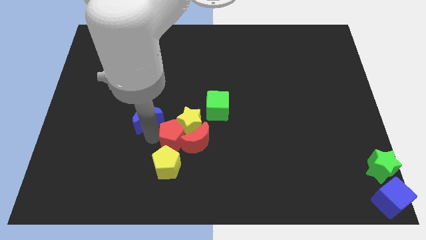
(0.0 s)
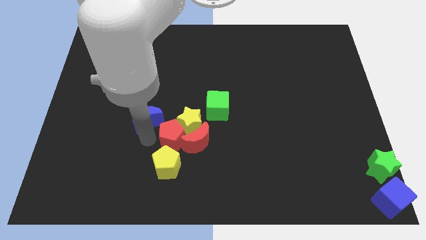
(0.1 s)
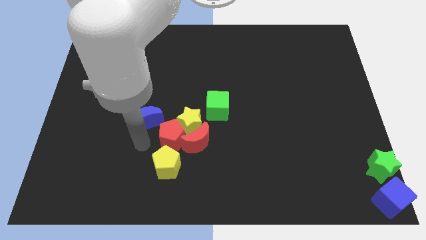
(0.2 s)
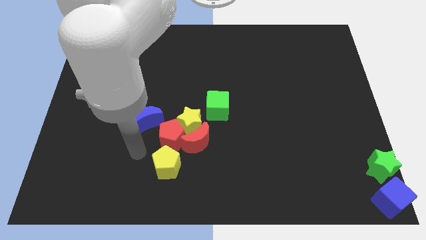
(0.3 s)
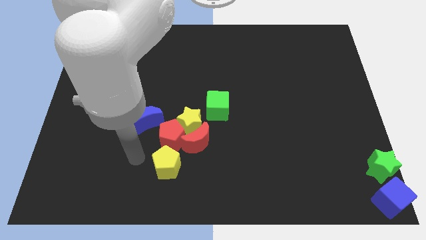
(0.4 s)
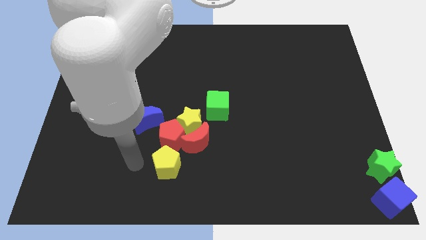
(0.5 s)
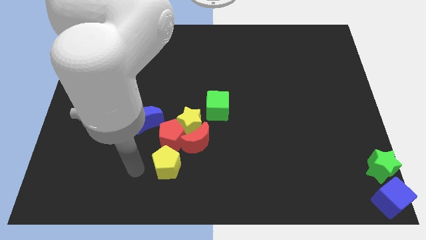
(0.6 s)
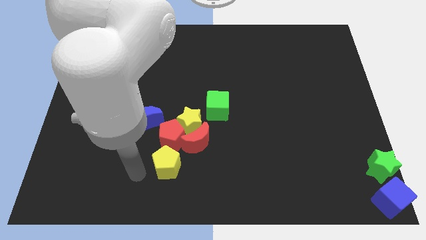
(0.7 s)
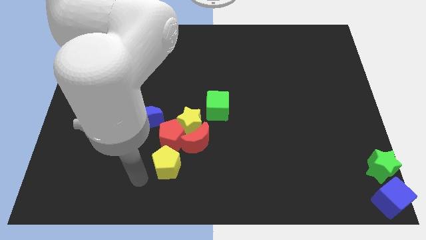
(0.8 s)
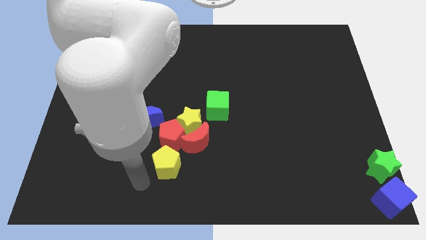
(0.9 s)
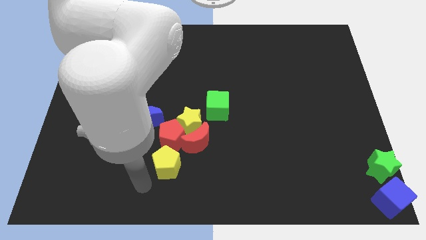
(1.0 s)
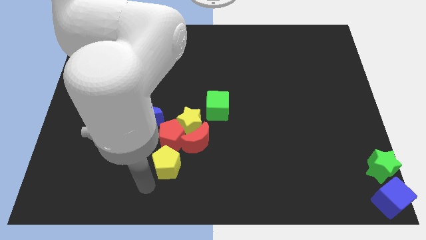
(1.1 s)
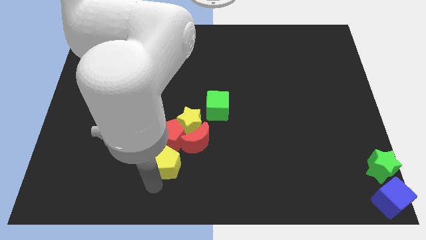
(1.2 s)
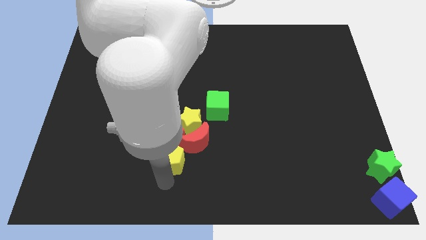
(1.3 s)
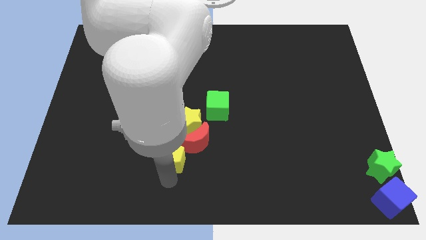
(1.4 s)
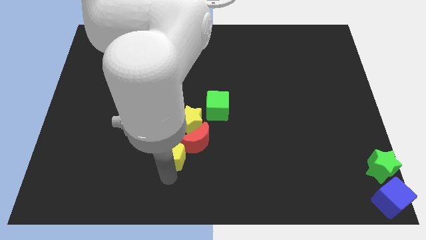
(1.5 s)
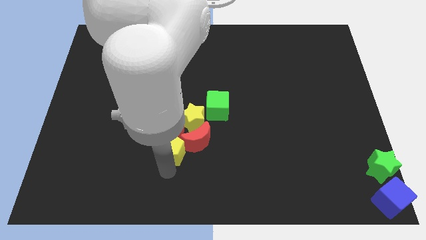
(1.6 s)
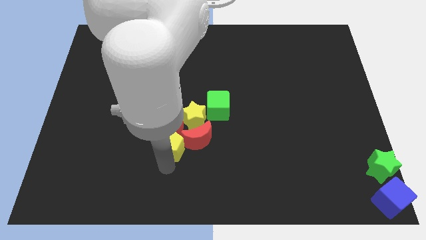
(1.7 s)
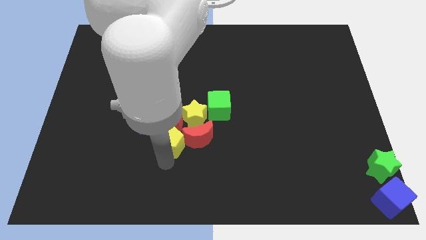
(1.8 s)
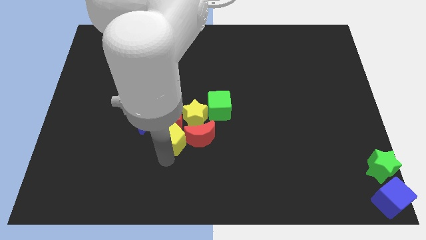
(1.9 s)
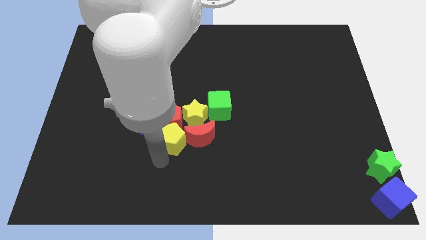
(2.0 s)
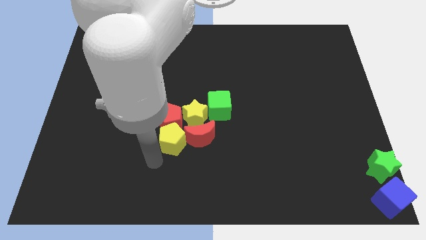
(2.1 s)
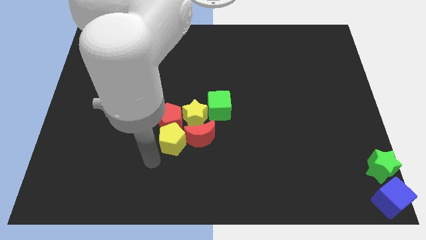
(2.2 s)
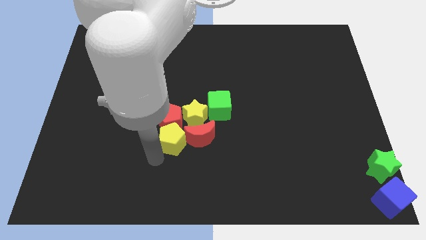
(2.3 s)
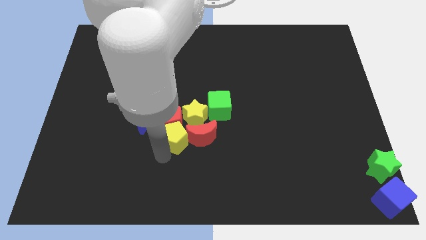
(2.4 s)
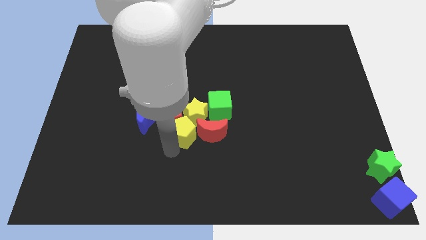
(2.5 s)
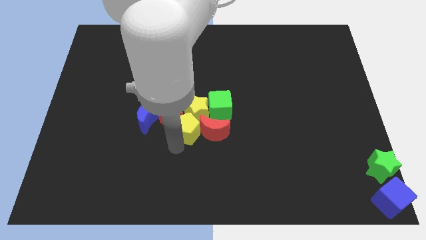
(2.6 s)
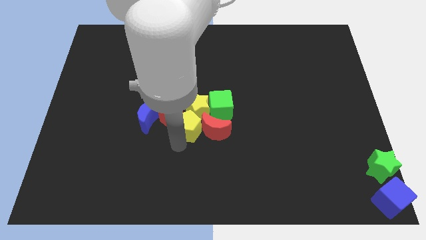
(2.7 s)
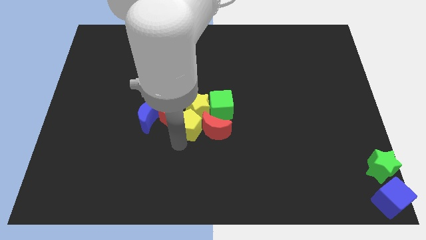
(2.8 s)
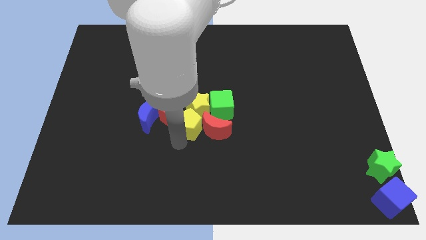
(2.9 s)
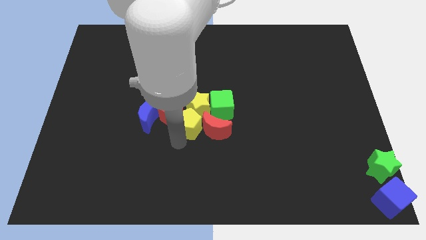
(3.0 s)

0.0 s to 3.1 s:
push the yellow pentagon into the bottom of the yellow star

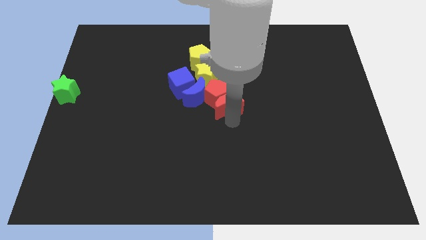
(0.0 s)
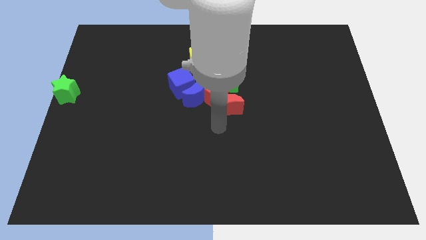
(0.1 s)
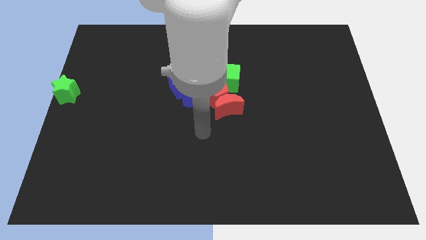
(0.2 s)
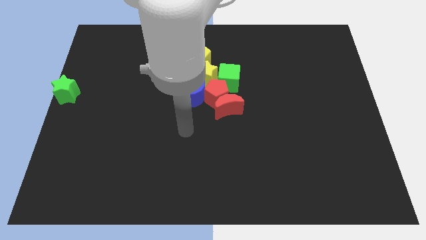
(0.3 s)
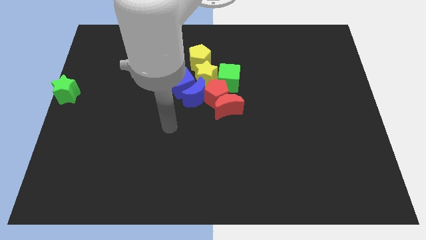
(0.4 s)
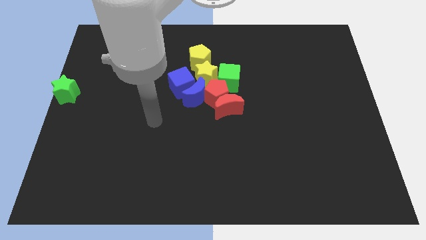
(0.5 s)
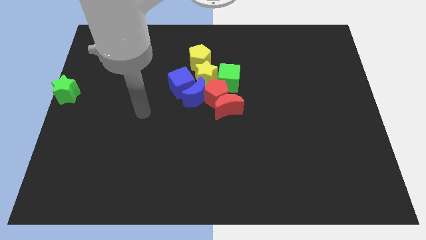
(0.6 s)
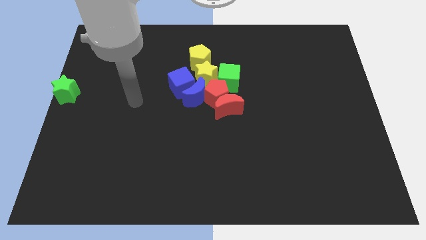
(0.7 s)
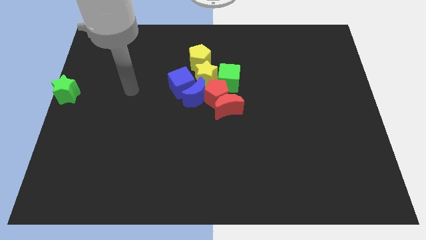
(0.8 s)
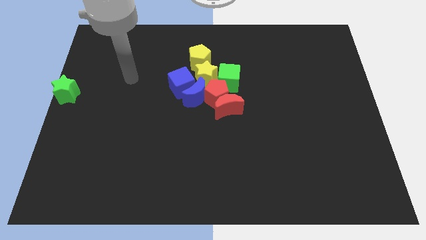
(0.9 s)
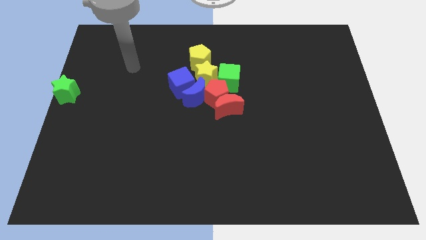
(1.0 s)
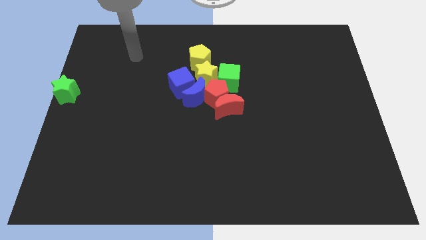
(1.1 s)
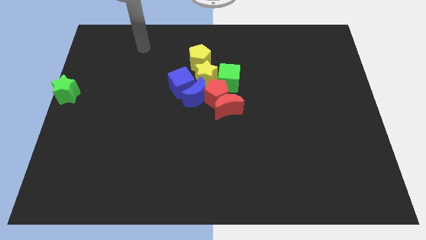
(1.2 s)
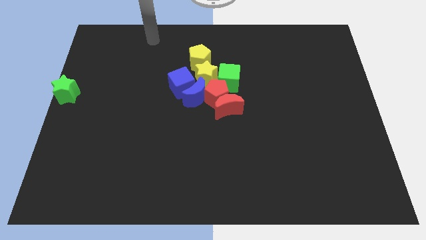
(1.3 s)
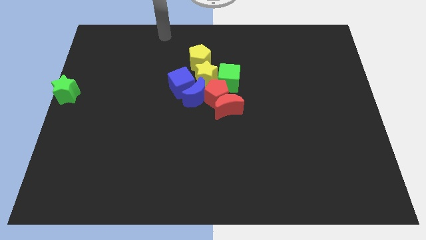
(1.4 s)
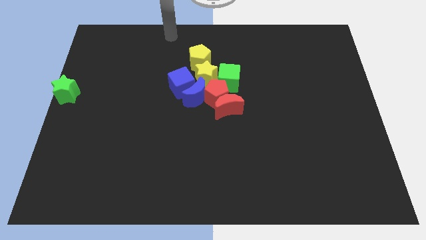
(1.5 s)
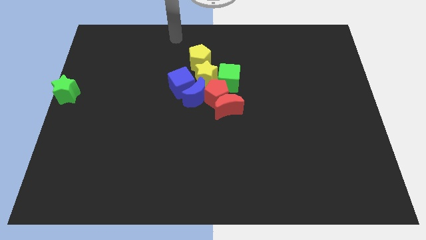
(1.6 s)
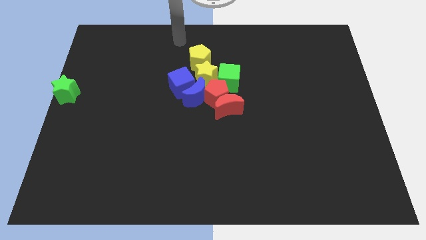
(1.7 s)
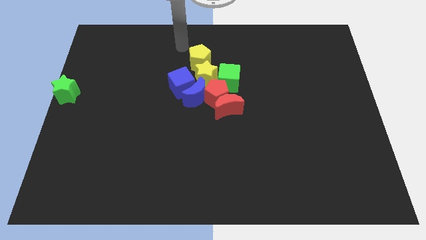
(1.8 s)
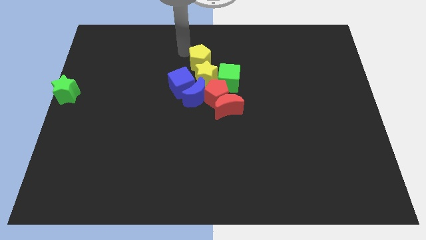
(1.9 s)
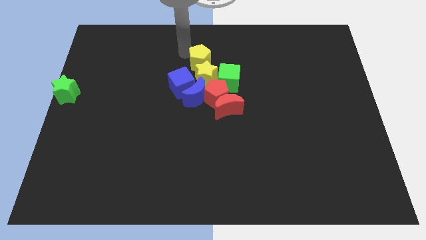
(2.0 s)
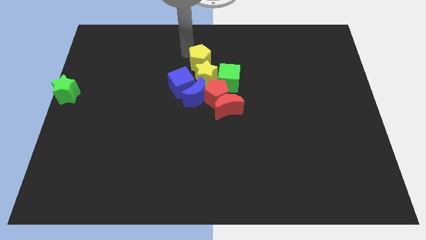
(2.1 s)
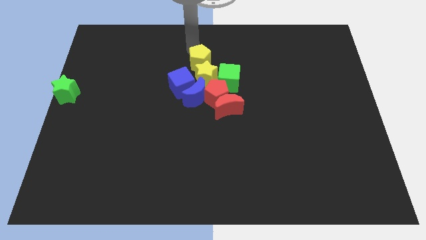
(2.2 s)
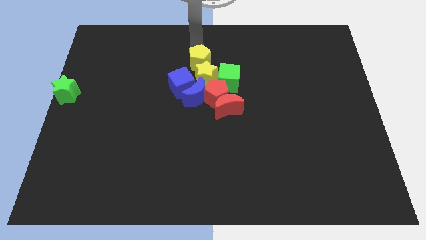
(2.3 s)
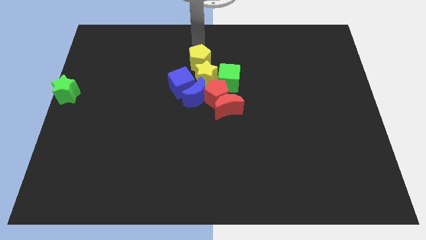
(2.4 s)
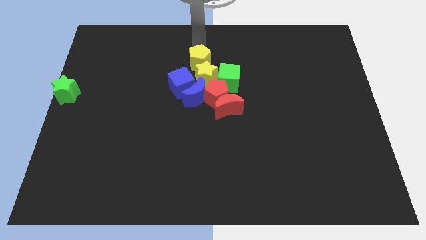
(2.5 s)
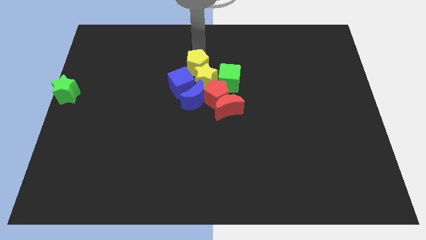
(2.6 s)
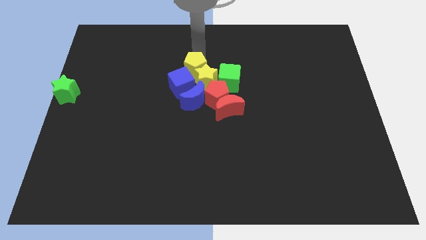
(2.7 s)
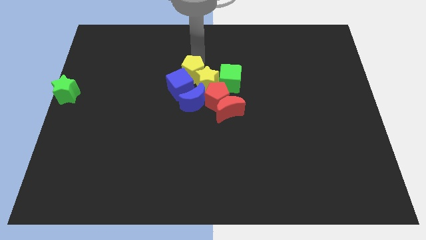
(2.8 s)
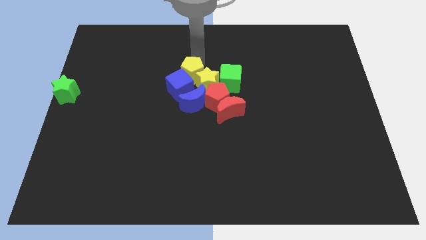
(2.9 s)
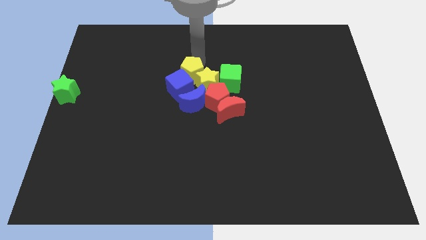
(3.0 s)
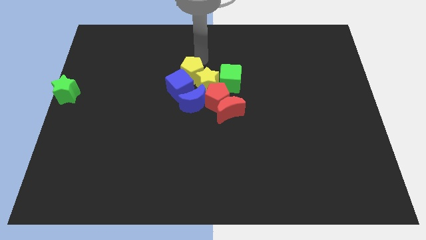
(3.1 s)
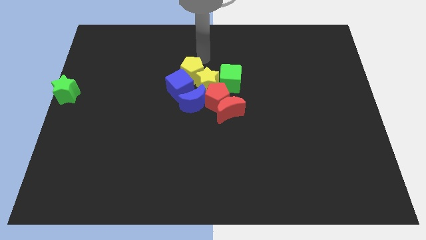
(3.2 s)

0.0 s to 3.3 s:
move the yellow pentagon into the blue cube

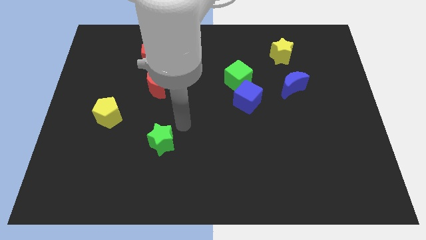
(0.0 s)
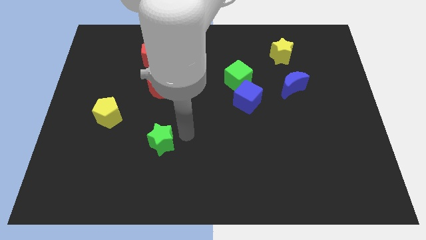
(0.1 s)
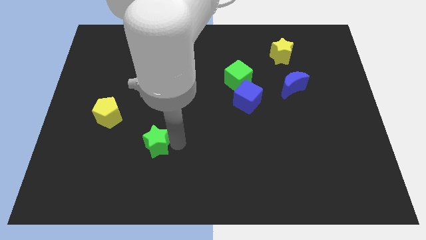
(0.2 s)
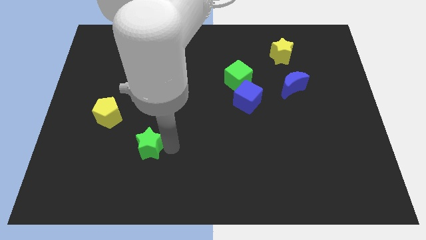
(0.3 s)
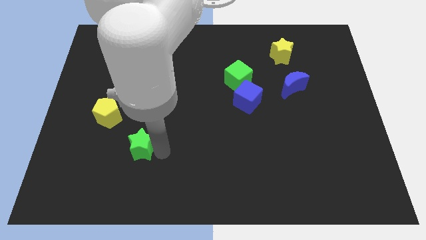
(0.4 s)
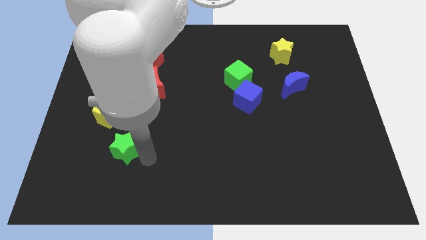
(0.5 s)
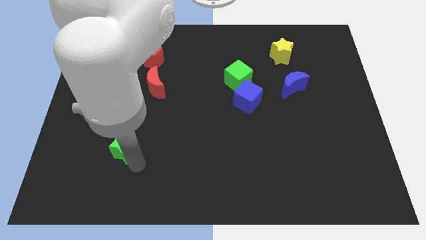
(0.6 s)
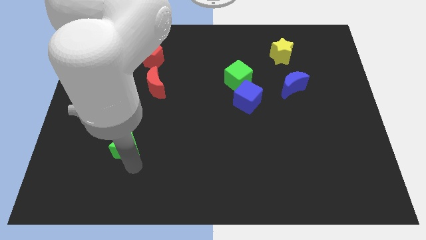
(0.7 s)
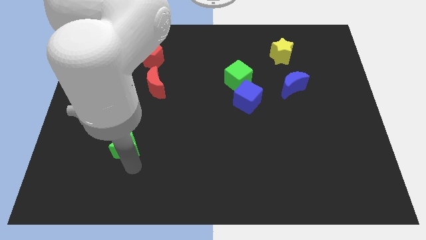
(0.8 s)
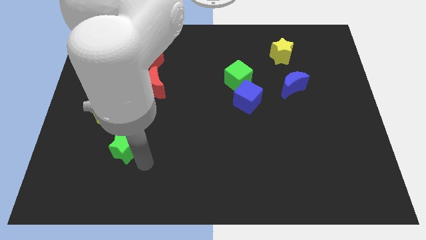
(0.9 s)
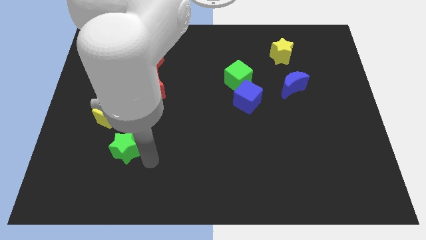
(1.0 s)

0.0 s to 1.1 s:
place the green star diagonally to the bottom right of the yellow pentagon

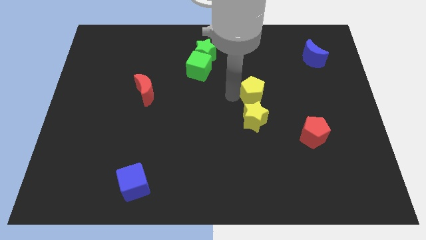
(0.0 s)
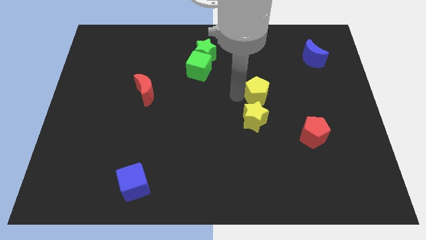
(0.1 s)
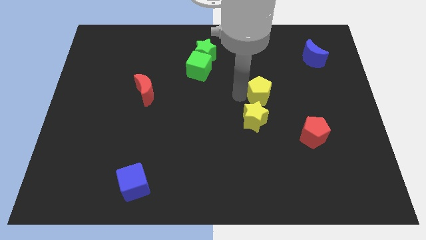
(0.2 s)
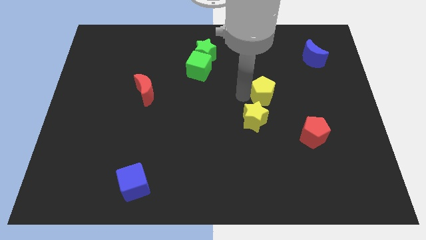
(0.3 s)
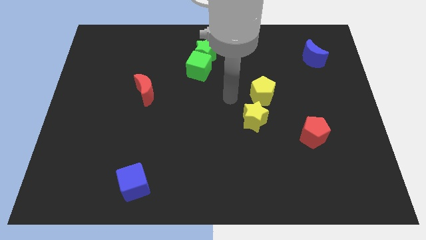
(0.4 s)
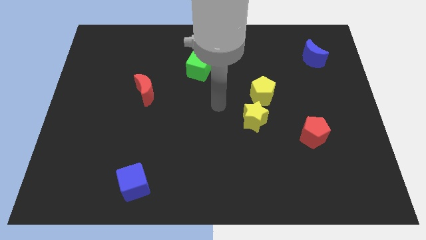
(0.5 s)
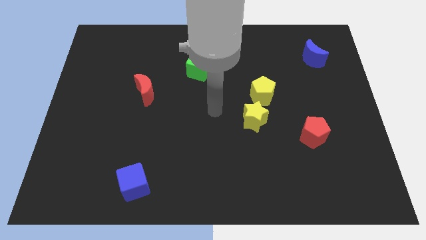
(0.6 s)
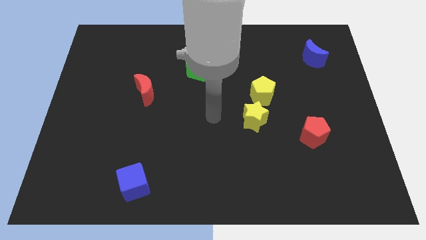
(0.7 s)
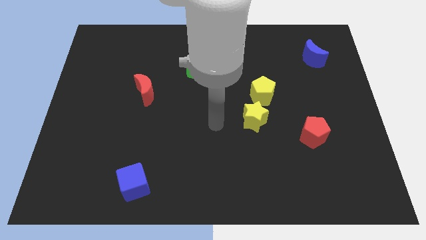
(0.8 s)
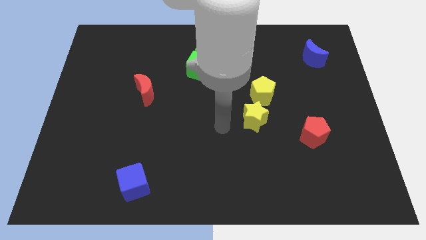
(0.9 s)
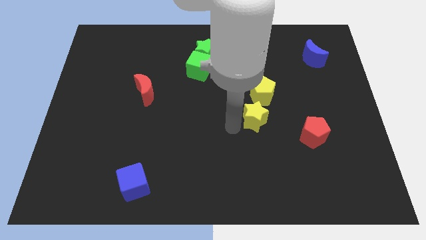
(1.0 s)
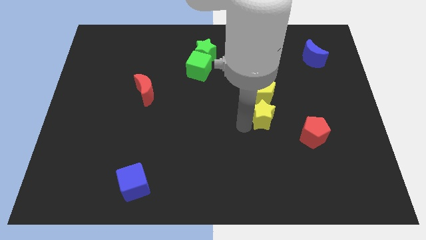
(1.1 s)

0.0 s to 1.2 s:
place the arm to the left of the yellow star

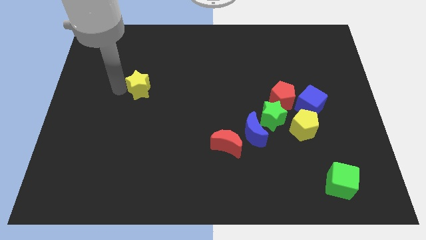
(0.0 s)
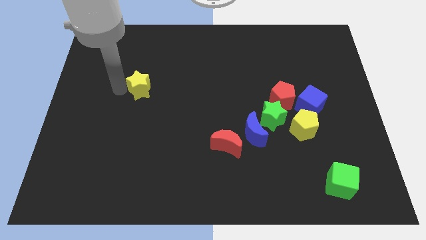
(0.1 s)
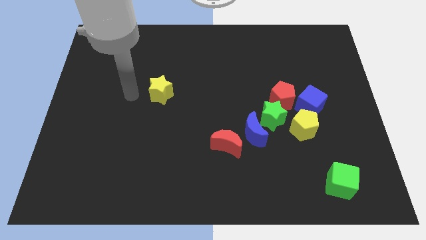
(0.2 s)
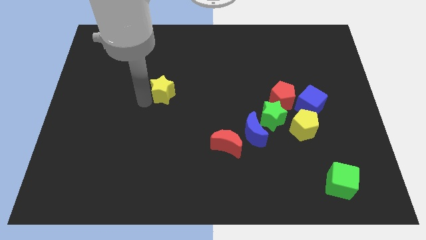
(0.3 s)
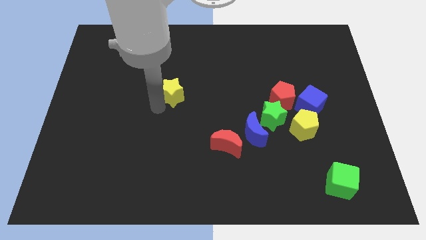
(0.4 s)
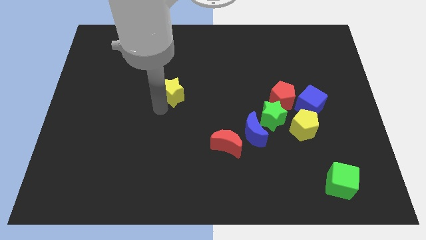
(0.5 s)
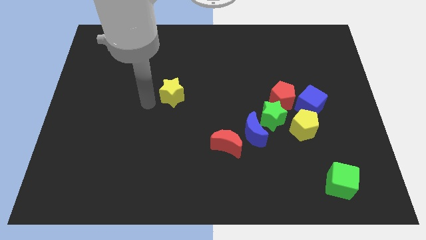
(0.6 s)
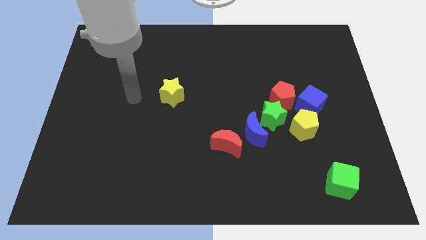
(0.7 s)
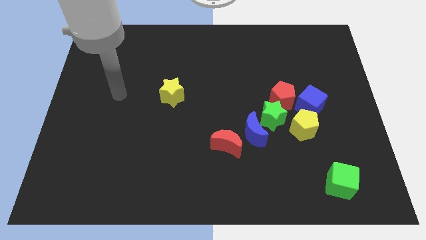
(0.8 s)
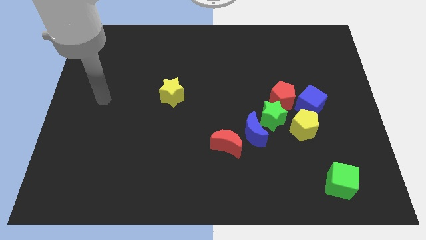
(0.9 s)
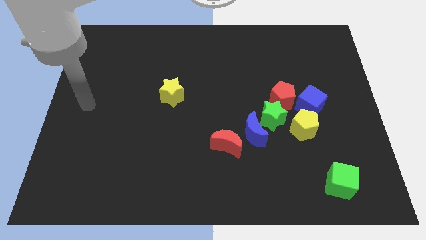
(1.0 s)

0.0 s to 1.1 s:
move the yellow star to the center of the board
